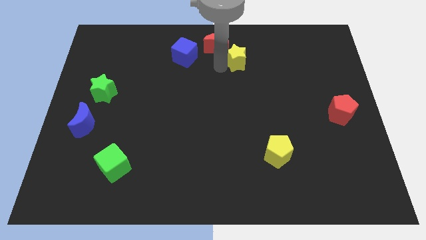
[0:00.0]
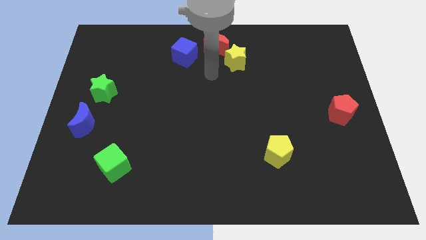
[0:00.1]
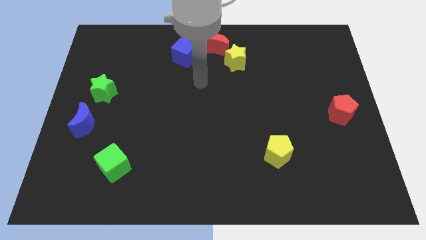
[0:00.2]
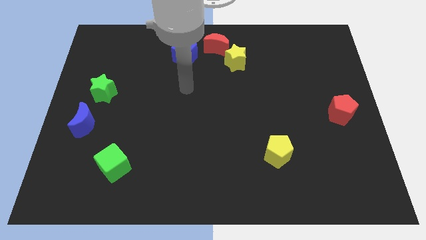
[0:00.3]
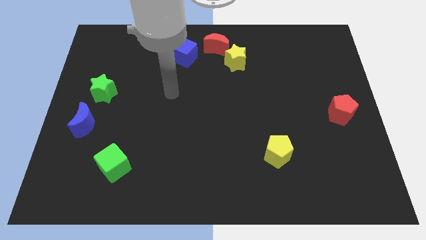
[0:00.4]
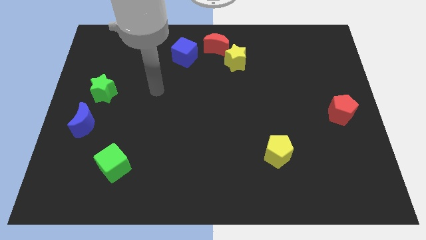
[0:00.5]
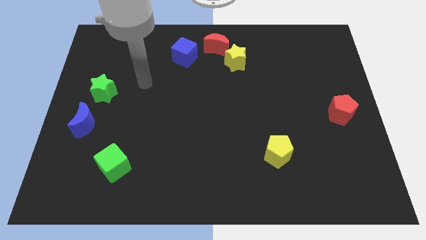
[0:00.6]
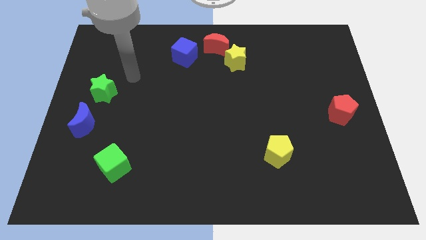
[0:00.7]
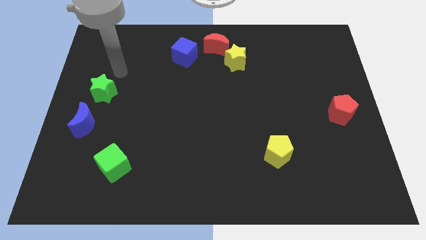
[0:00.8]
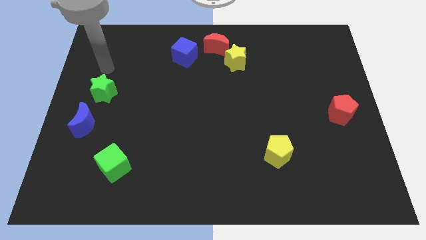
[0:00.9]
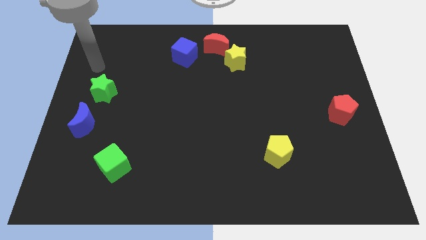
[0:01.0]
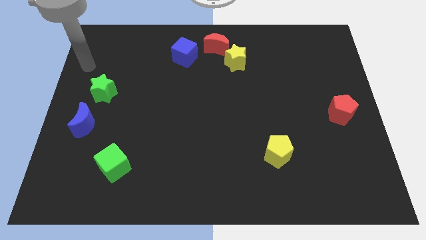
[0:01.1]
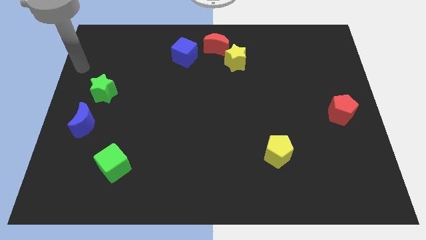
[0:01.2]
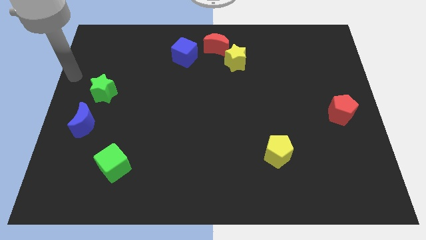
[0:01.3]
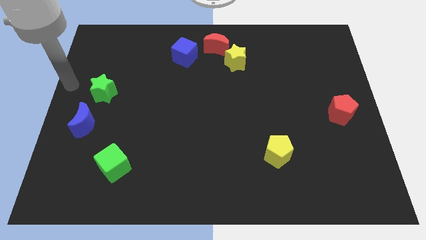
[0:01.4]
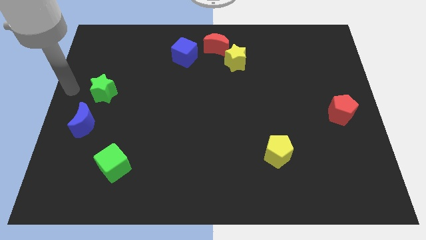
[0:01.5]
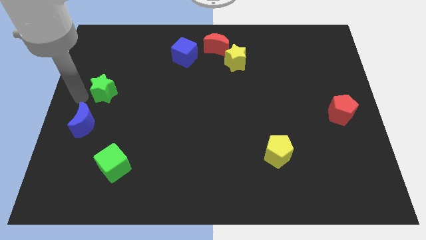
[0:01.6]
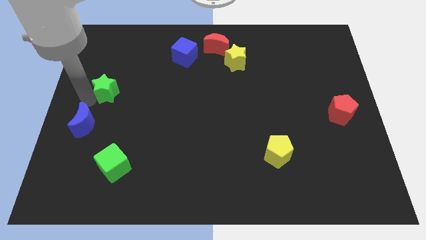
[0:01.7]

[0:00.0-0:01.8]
move your arm to the left of green star

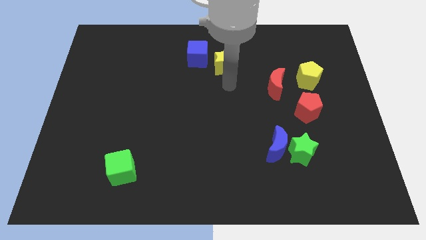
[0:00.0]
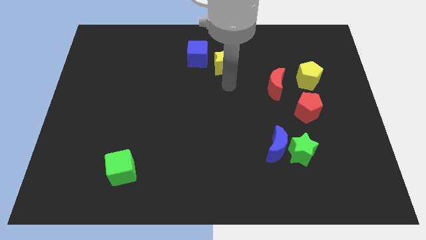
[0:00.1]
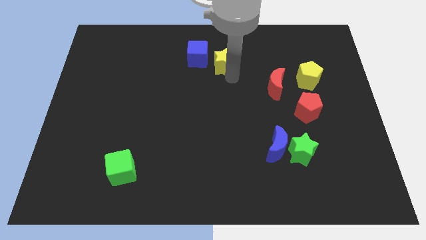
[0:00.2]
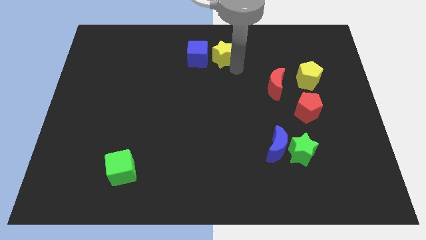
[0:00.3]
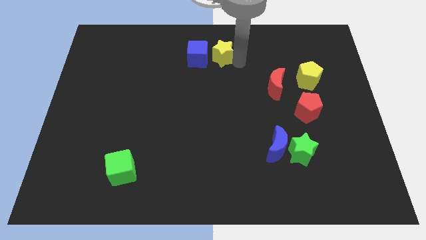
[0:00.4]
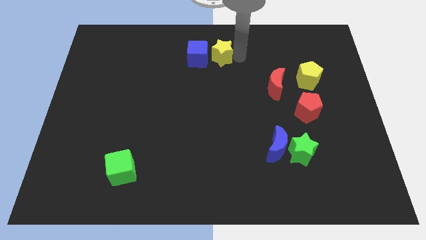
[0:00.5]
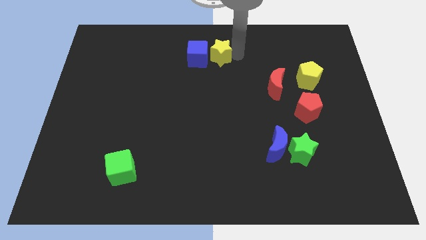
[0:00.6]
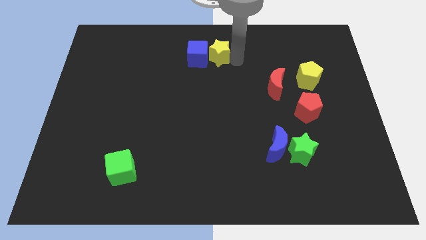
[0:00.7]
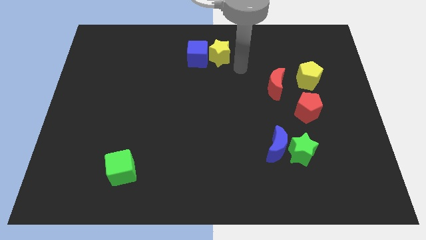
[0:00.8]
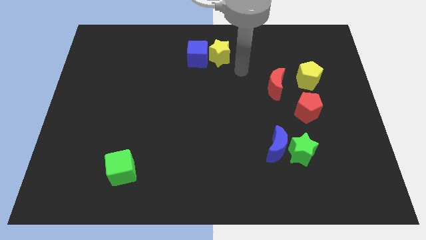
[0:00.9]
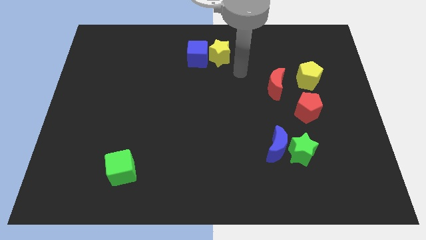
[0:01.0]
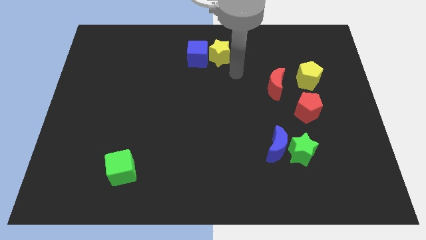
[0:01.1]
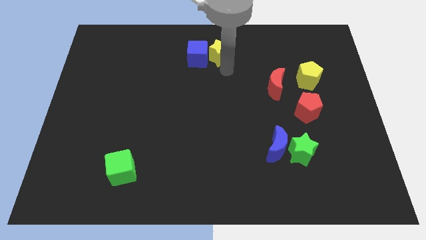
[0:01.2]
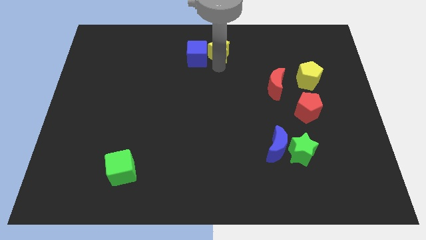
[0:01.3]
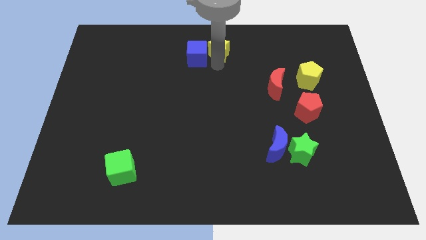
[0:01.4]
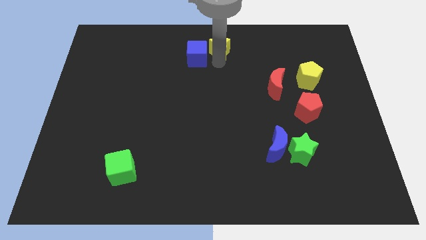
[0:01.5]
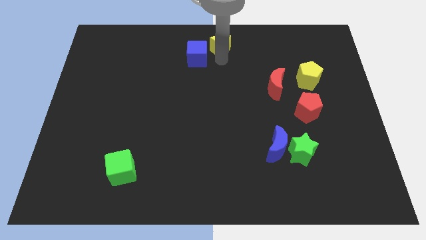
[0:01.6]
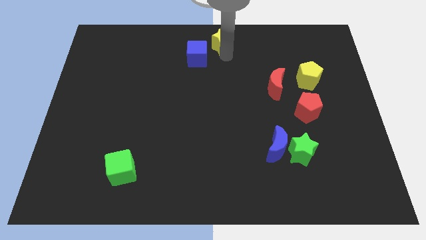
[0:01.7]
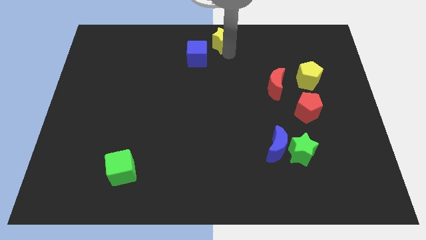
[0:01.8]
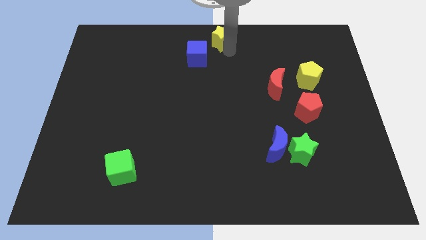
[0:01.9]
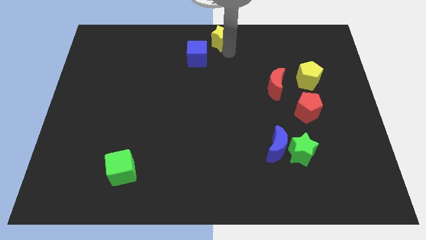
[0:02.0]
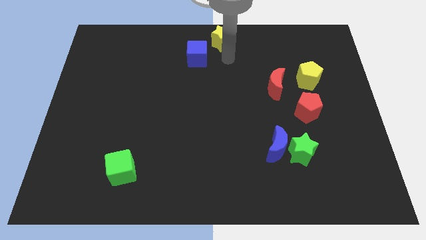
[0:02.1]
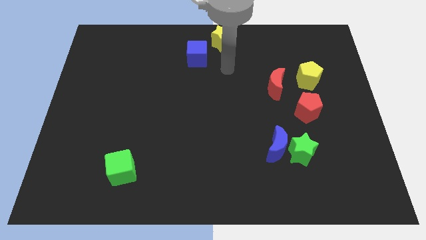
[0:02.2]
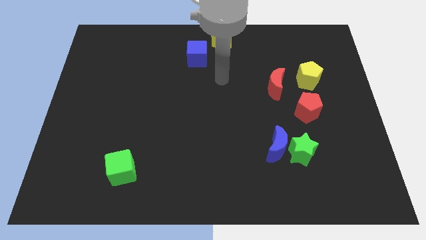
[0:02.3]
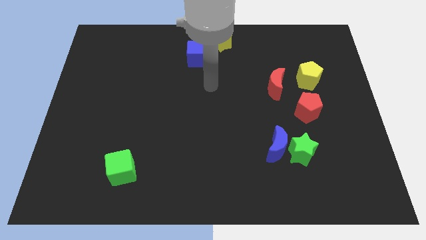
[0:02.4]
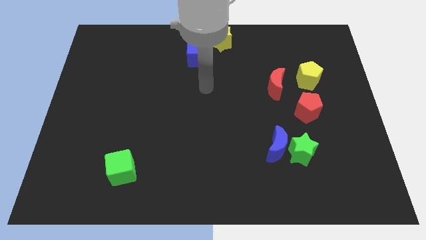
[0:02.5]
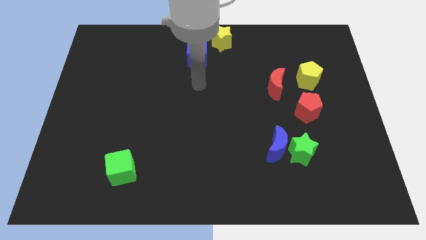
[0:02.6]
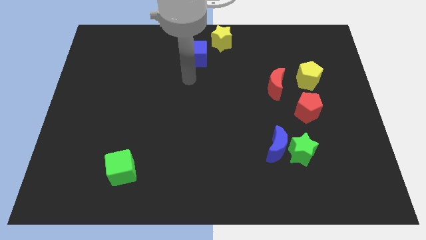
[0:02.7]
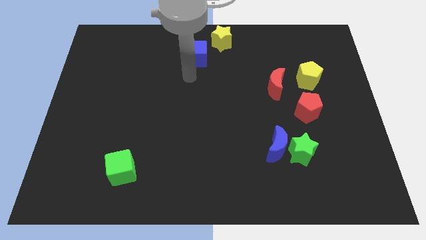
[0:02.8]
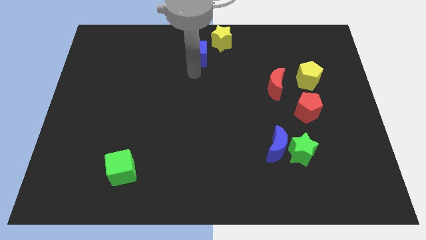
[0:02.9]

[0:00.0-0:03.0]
move the yellow star at the top right of the blue cube

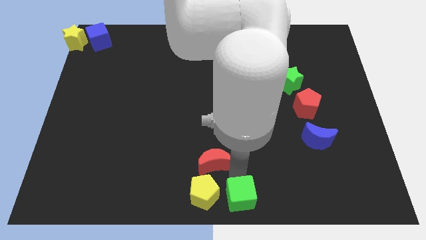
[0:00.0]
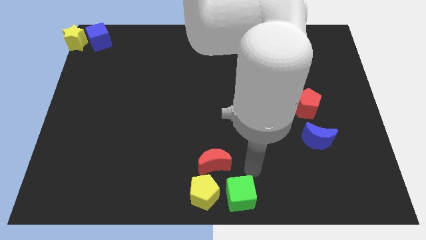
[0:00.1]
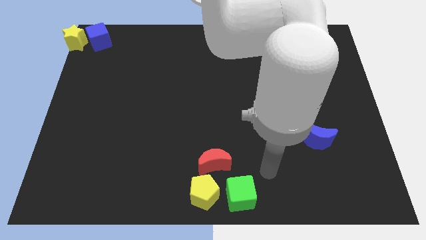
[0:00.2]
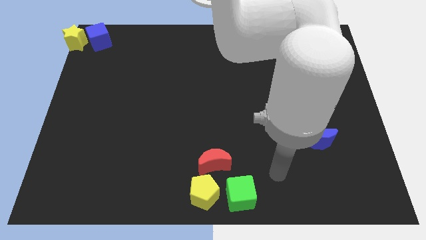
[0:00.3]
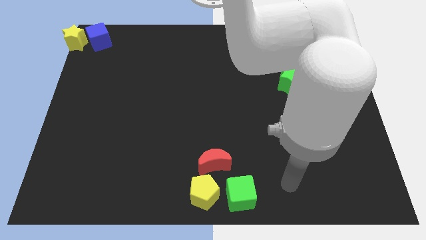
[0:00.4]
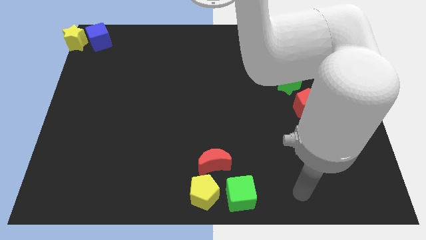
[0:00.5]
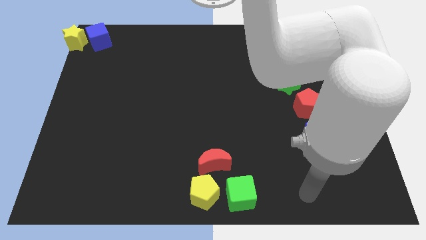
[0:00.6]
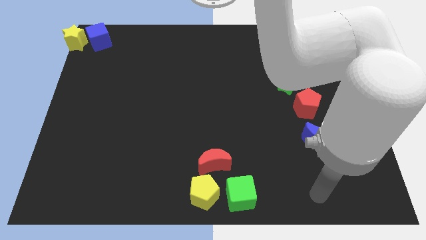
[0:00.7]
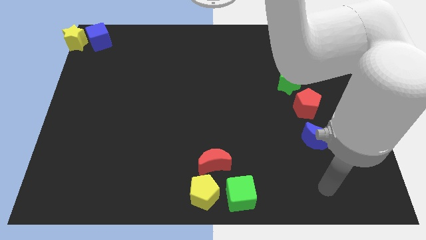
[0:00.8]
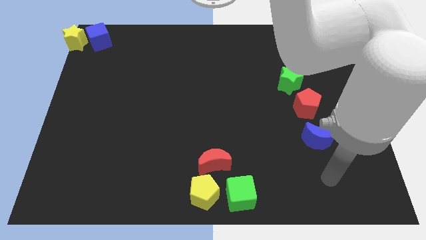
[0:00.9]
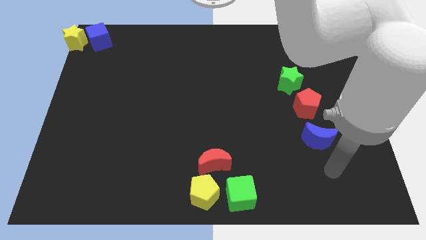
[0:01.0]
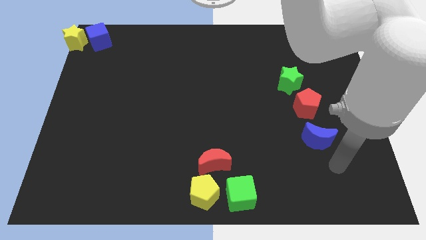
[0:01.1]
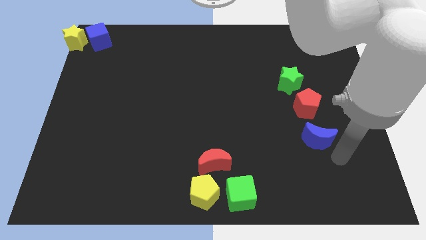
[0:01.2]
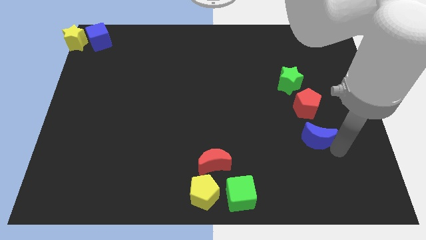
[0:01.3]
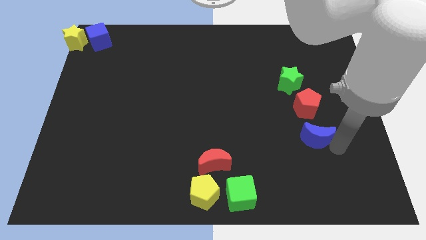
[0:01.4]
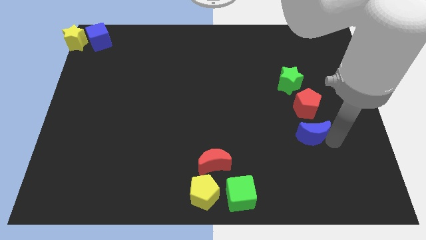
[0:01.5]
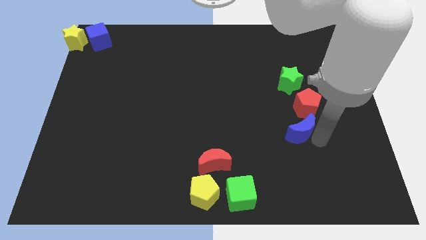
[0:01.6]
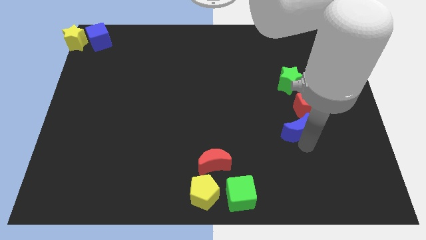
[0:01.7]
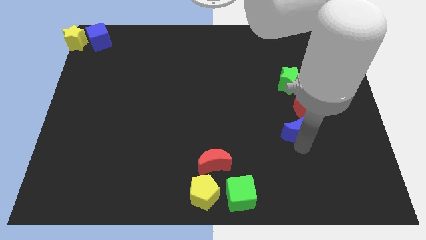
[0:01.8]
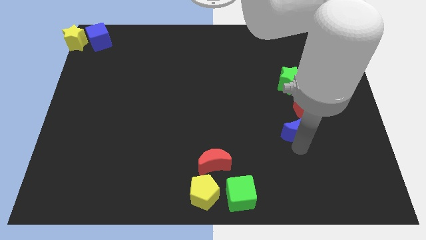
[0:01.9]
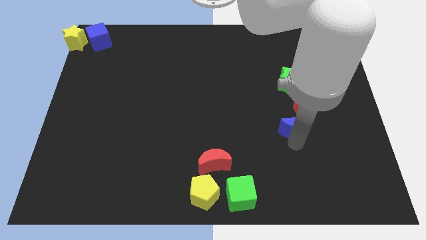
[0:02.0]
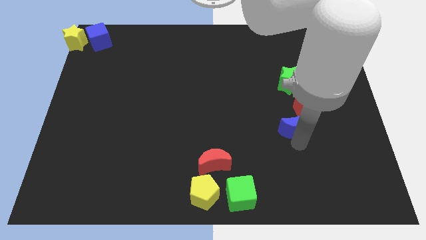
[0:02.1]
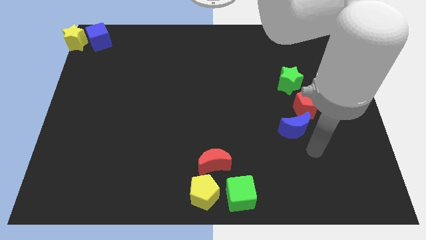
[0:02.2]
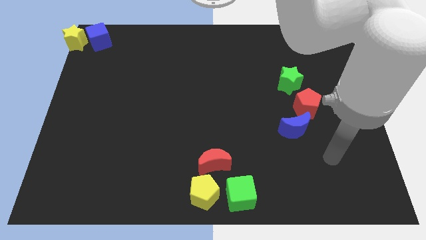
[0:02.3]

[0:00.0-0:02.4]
put the blue crescent below the red pentagon

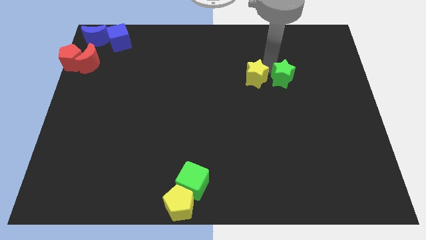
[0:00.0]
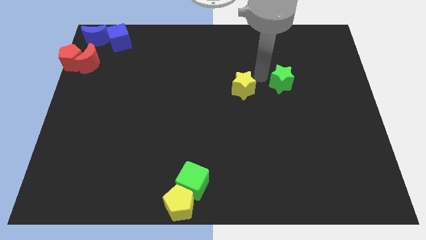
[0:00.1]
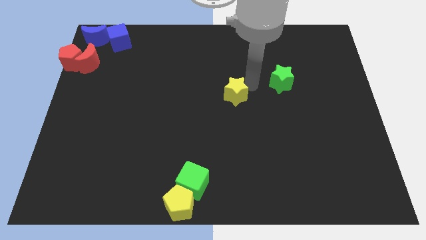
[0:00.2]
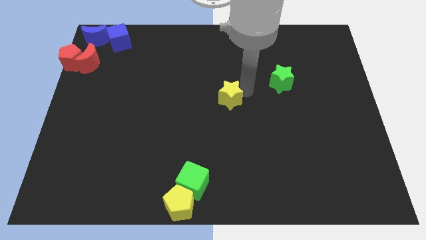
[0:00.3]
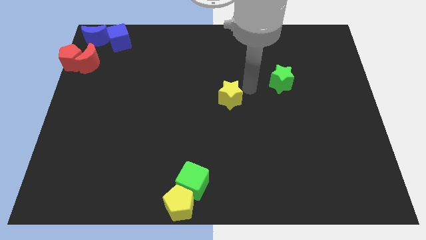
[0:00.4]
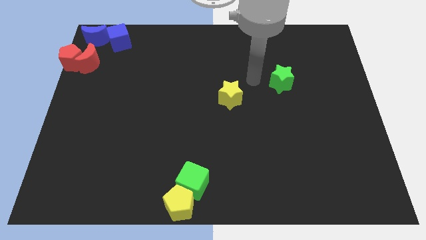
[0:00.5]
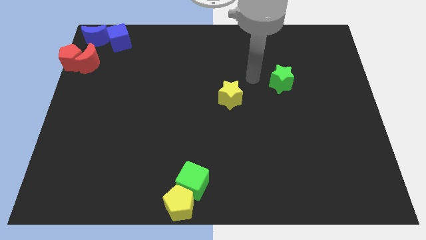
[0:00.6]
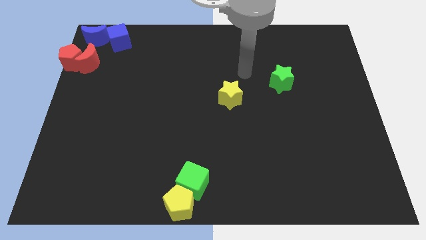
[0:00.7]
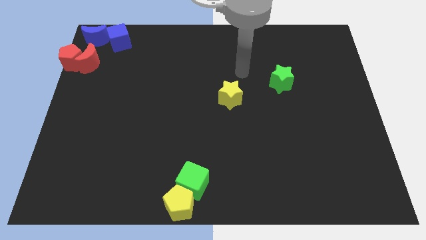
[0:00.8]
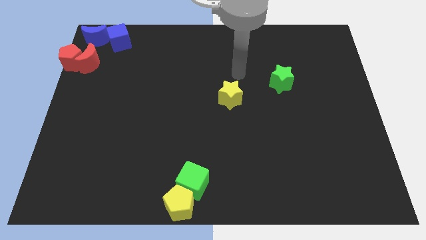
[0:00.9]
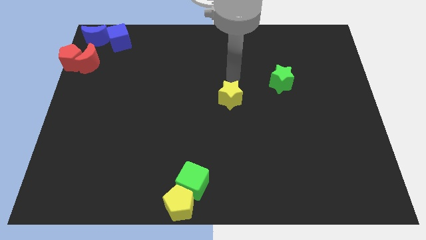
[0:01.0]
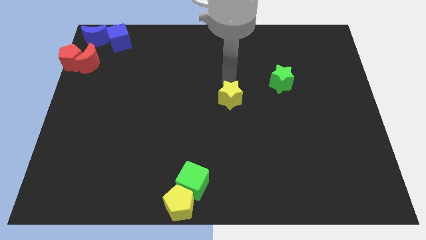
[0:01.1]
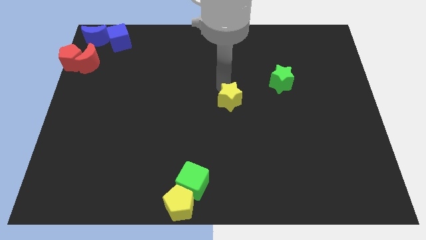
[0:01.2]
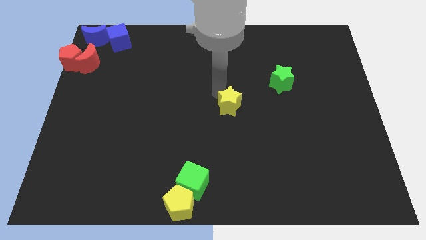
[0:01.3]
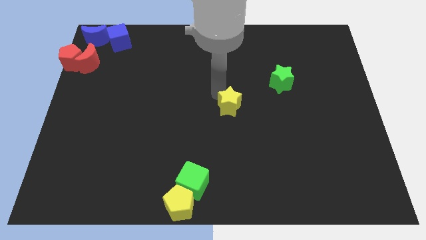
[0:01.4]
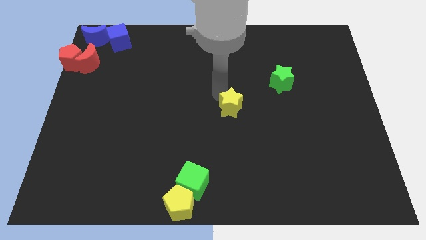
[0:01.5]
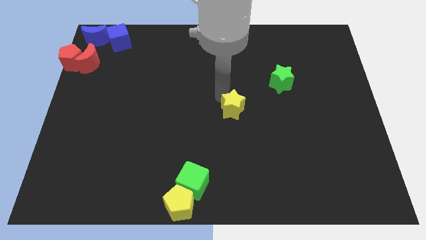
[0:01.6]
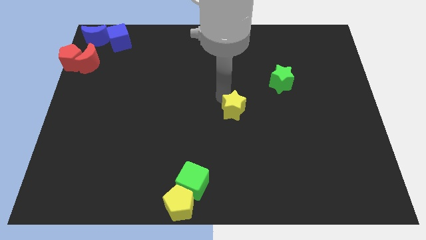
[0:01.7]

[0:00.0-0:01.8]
place yellow star to the center of the board

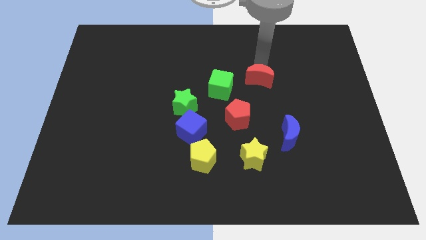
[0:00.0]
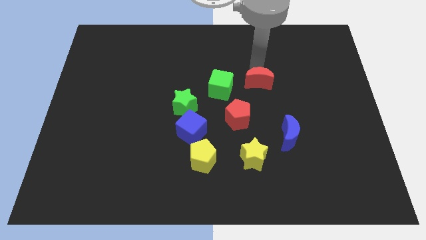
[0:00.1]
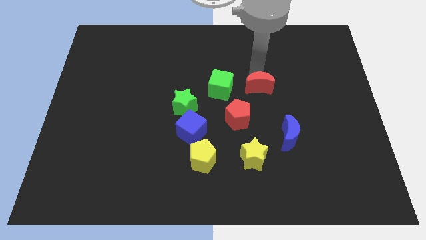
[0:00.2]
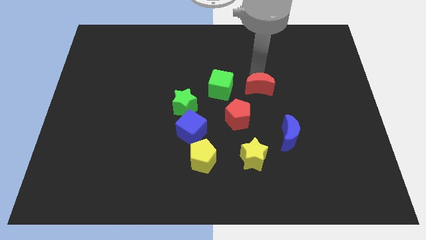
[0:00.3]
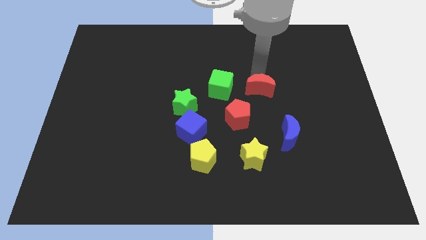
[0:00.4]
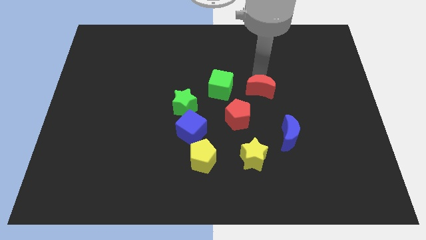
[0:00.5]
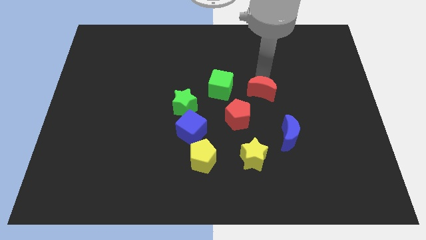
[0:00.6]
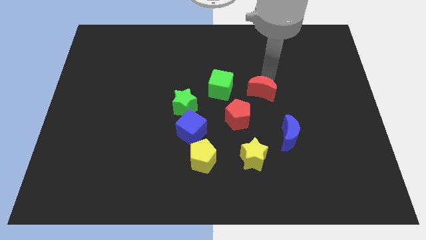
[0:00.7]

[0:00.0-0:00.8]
place the red crescent right to the green cube
